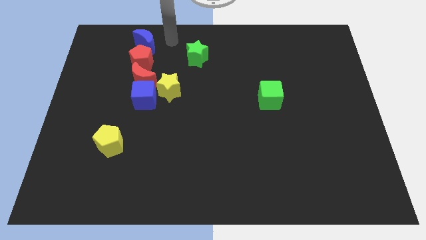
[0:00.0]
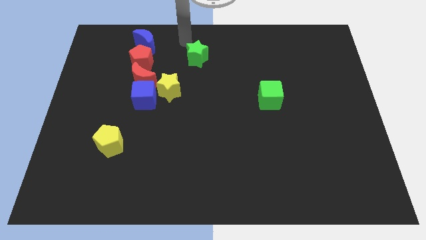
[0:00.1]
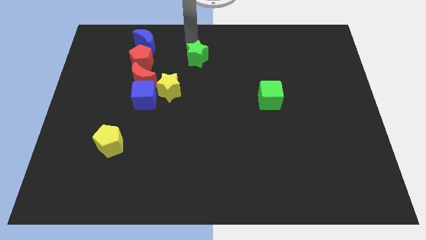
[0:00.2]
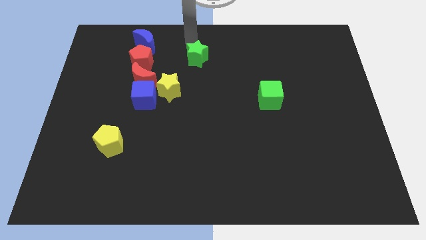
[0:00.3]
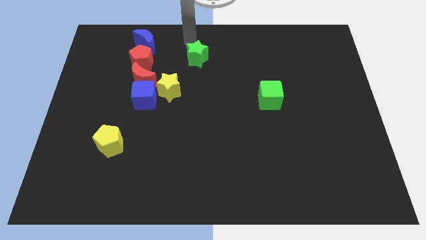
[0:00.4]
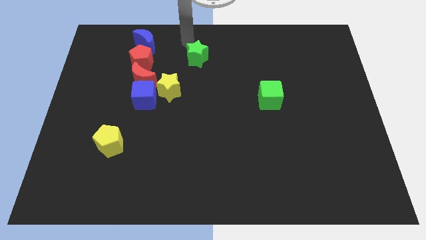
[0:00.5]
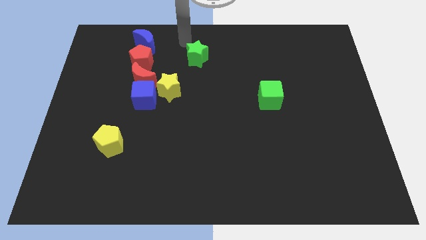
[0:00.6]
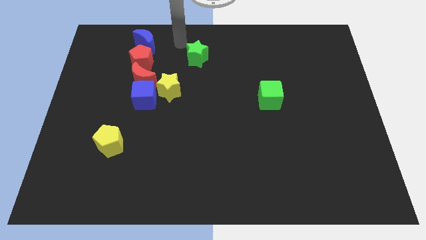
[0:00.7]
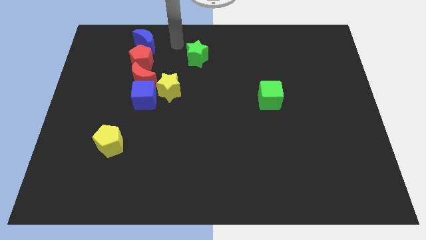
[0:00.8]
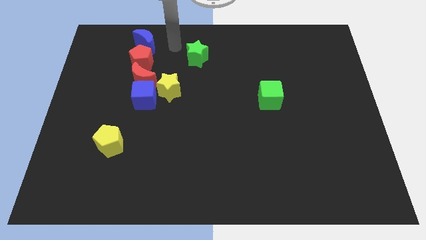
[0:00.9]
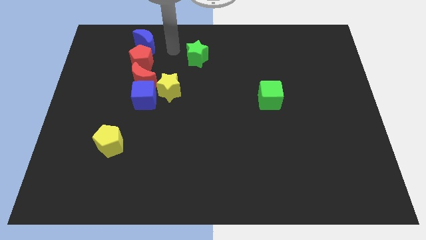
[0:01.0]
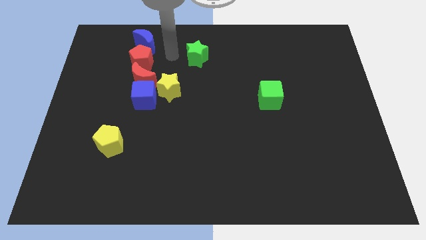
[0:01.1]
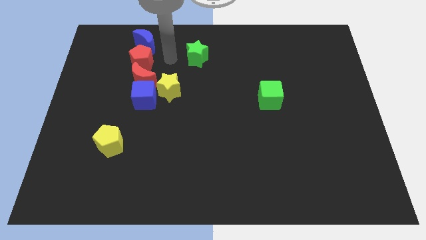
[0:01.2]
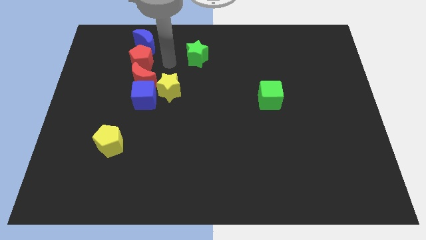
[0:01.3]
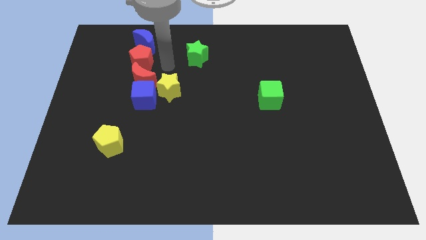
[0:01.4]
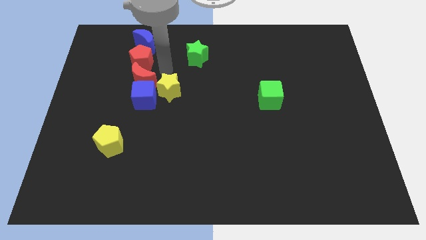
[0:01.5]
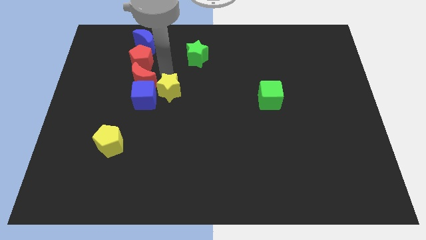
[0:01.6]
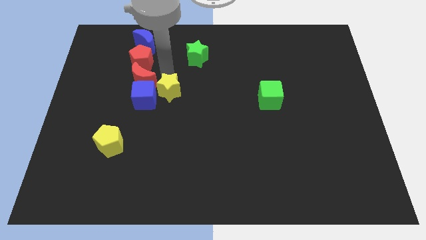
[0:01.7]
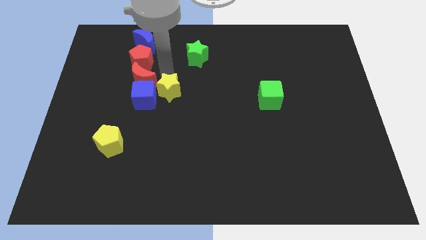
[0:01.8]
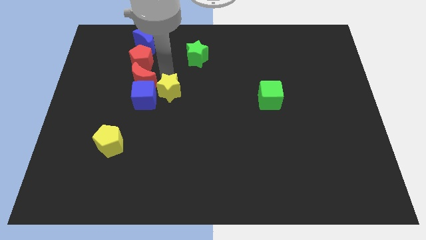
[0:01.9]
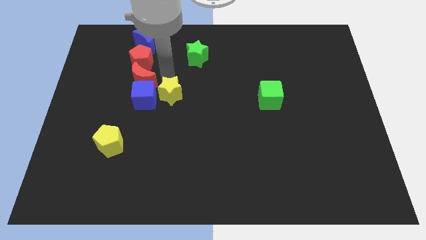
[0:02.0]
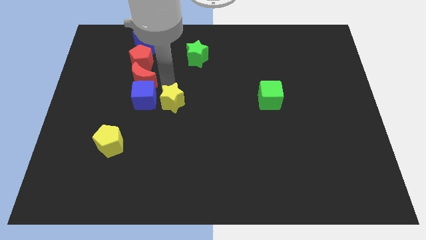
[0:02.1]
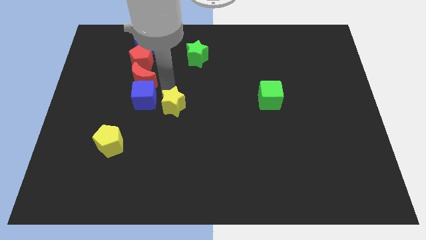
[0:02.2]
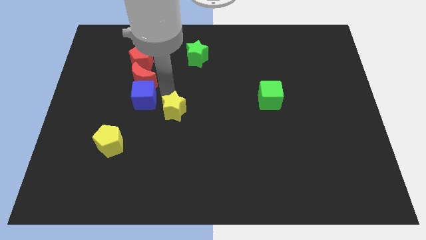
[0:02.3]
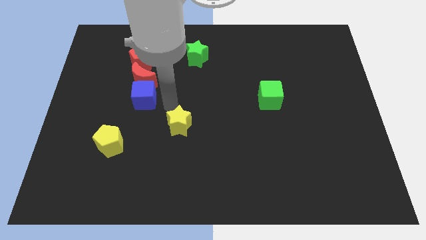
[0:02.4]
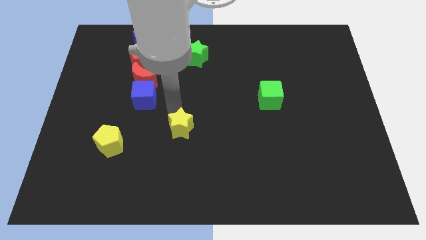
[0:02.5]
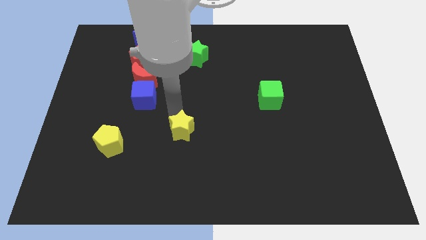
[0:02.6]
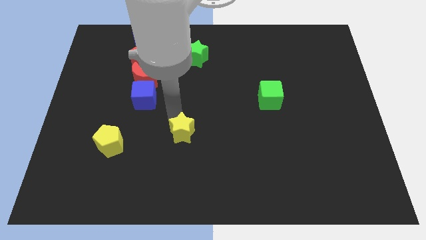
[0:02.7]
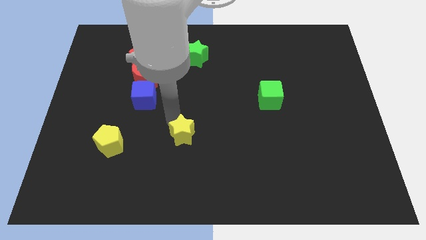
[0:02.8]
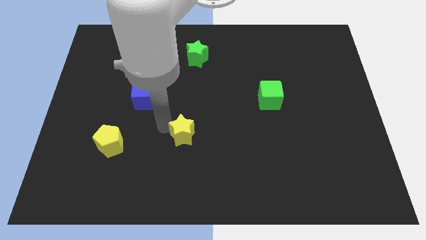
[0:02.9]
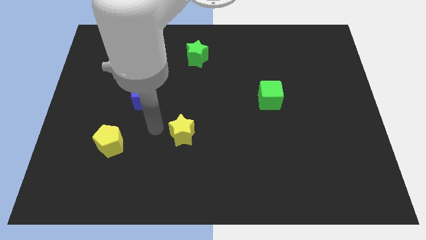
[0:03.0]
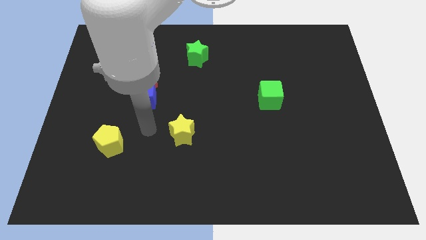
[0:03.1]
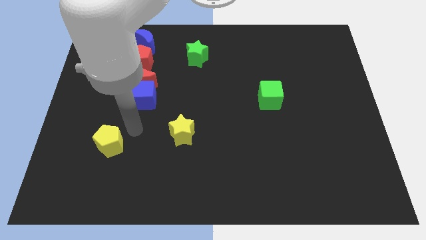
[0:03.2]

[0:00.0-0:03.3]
slightly move down the yellow star

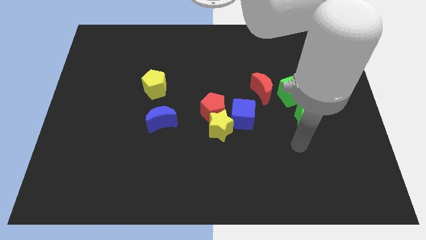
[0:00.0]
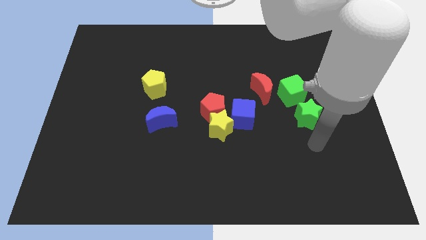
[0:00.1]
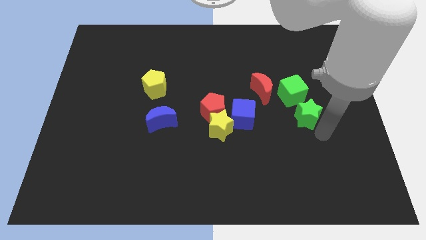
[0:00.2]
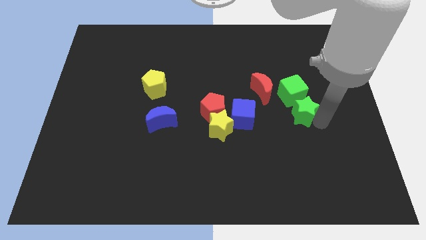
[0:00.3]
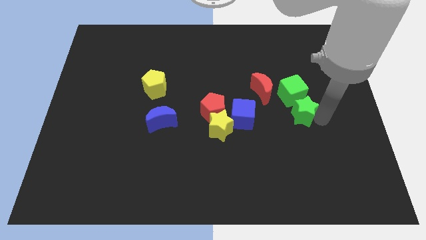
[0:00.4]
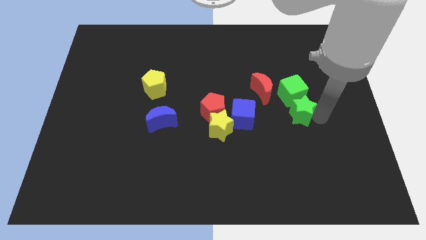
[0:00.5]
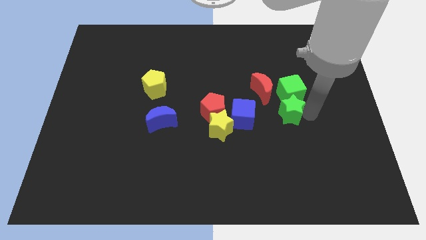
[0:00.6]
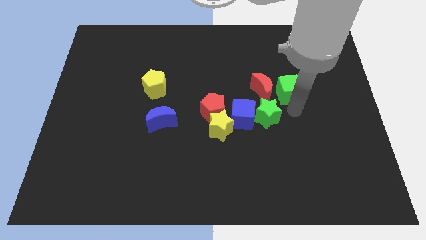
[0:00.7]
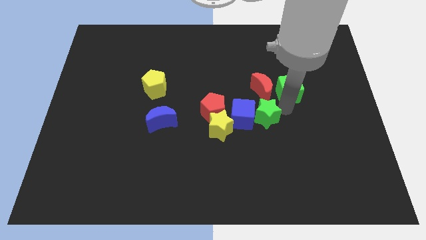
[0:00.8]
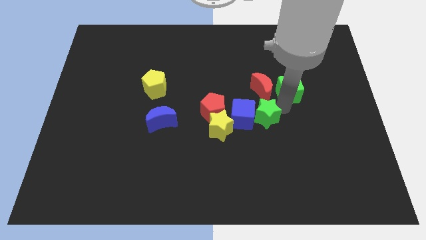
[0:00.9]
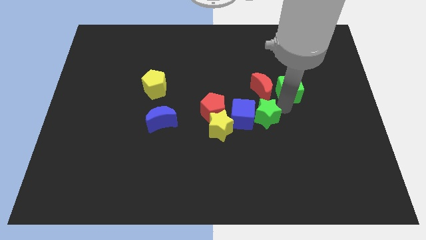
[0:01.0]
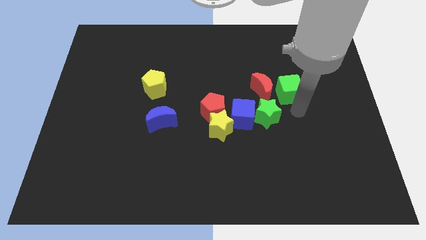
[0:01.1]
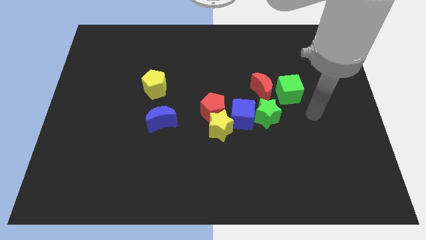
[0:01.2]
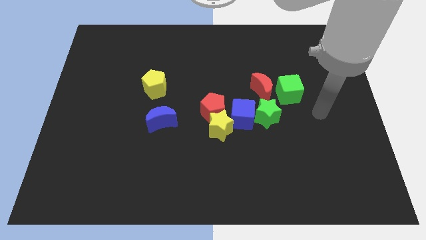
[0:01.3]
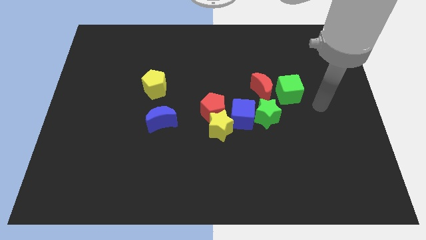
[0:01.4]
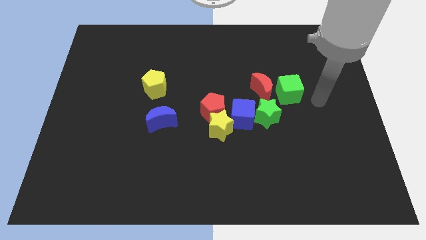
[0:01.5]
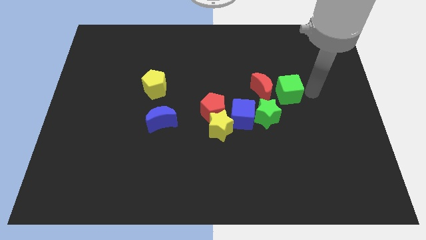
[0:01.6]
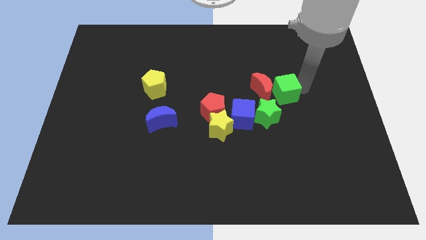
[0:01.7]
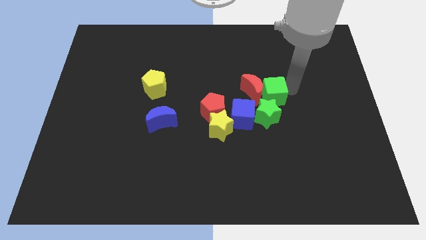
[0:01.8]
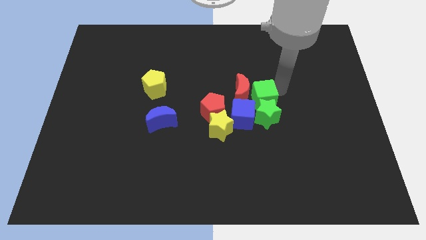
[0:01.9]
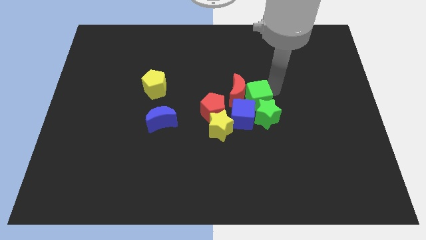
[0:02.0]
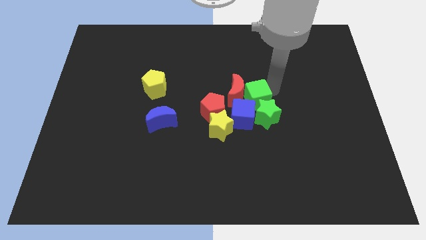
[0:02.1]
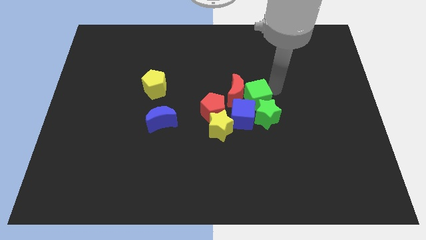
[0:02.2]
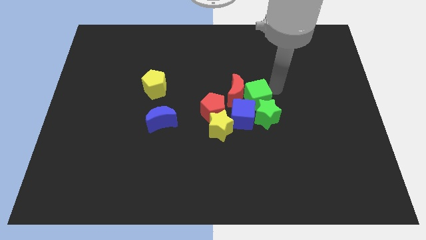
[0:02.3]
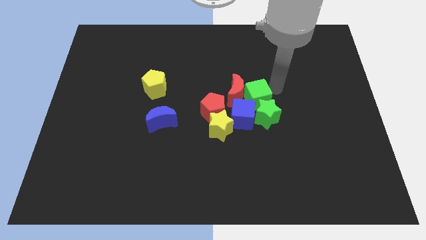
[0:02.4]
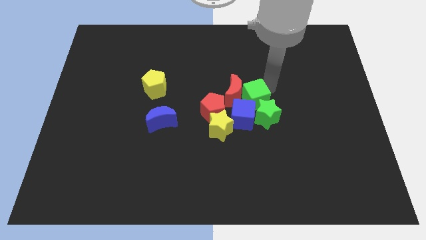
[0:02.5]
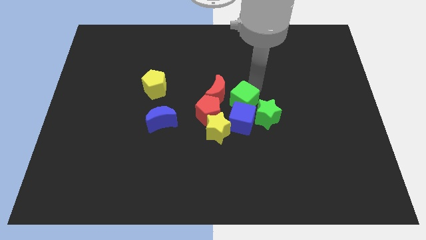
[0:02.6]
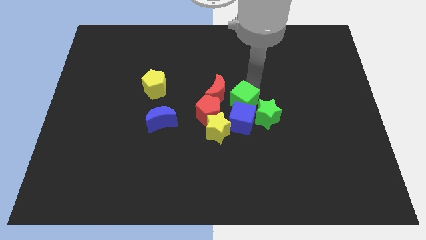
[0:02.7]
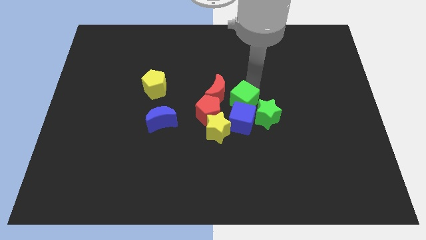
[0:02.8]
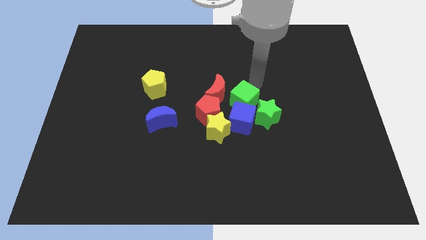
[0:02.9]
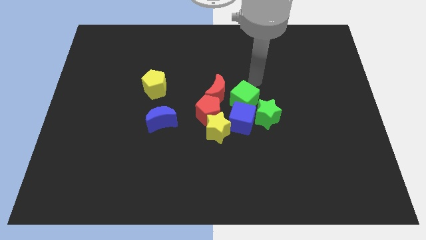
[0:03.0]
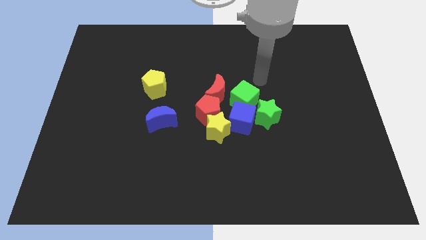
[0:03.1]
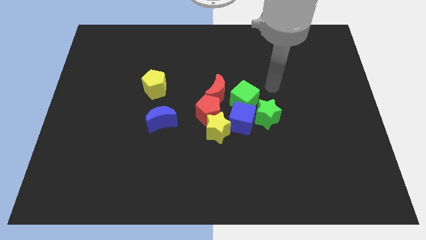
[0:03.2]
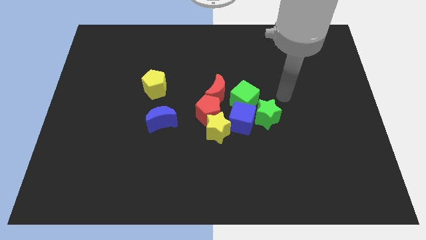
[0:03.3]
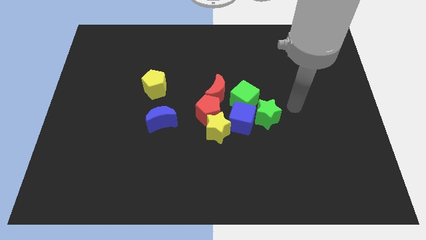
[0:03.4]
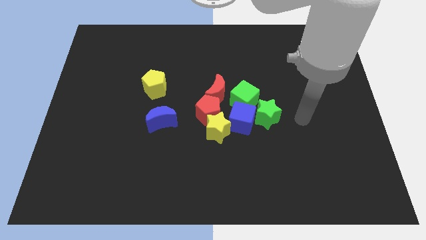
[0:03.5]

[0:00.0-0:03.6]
place the green cube on the top of the blue cube

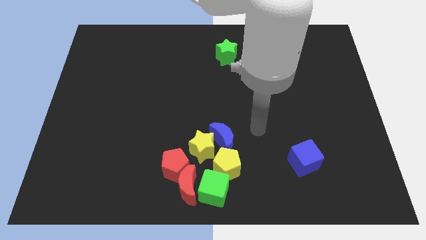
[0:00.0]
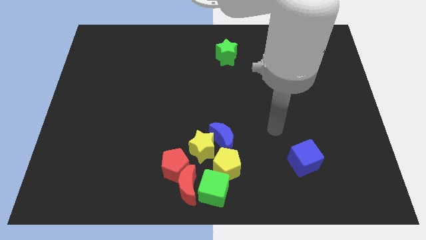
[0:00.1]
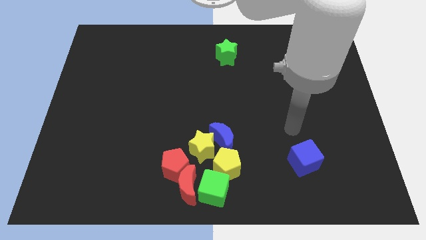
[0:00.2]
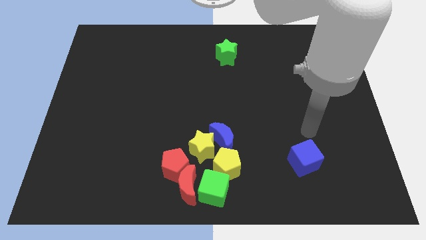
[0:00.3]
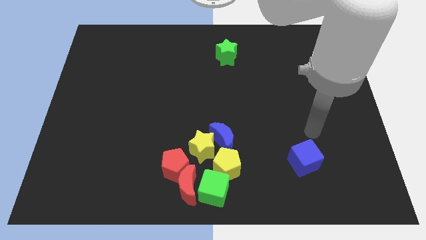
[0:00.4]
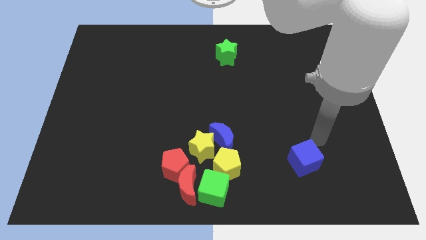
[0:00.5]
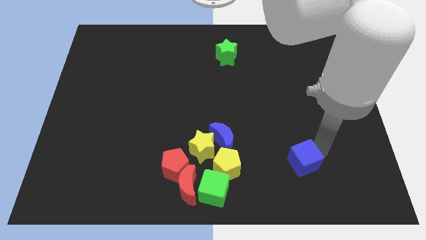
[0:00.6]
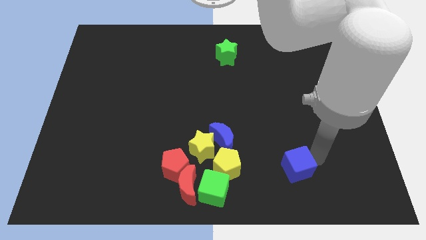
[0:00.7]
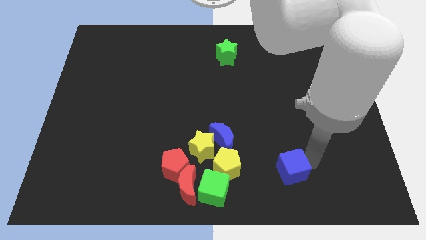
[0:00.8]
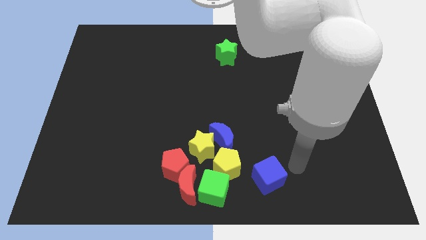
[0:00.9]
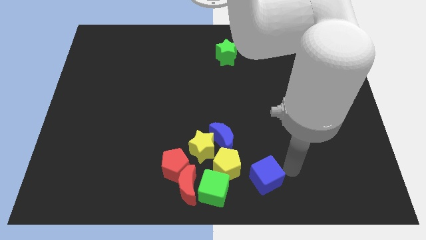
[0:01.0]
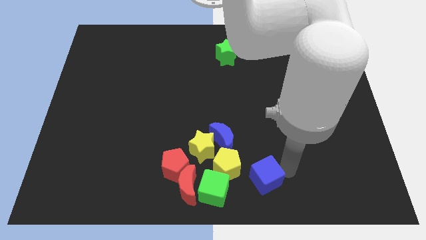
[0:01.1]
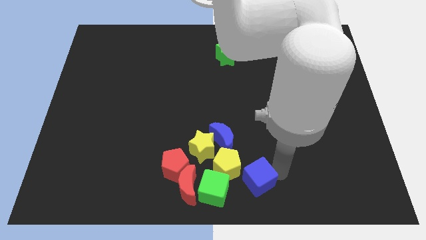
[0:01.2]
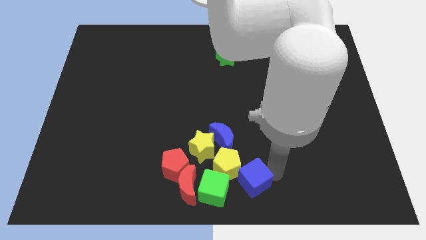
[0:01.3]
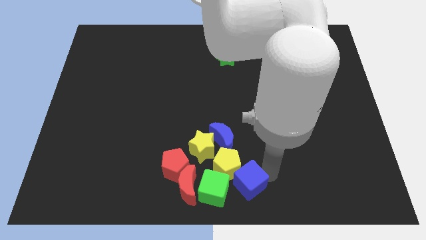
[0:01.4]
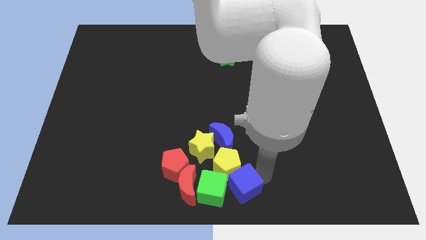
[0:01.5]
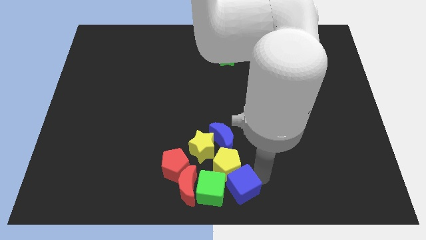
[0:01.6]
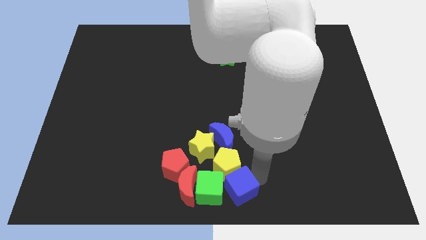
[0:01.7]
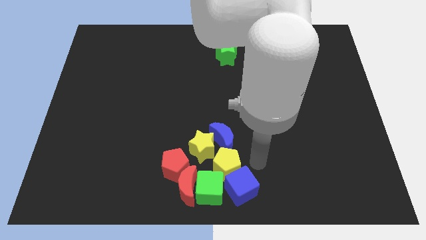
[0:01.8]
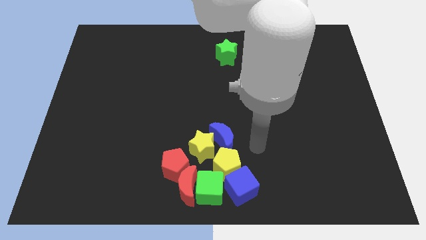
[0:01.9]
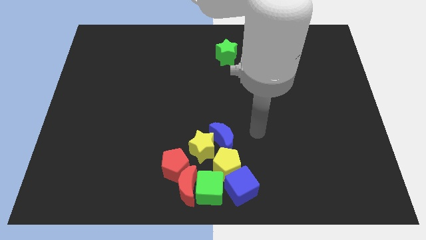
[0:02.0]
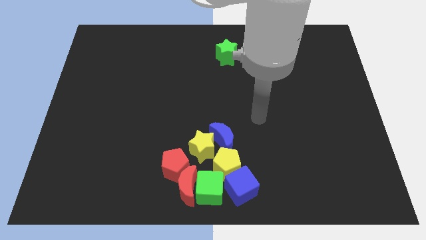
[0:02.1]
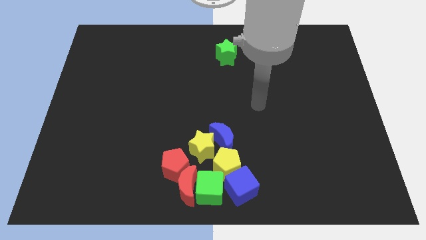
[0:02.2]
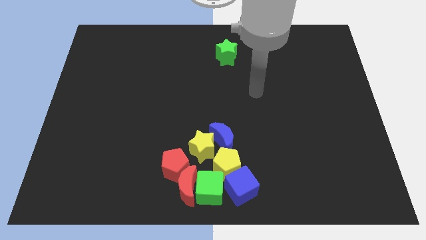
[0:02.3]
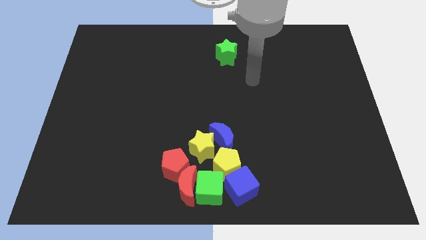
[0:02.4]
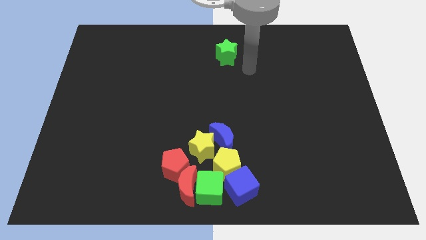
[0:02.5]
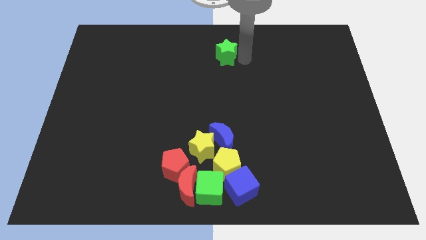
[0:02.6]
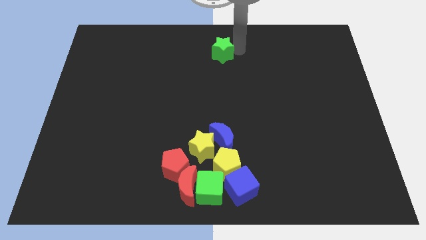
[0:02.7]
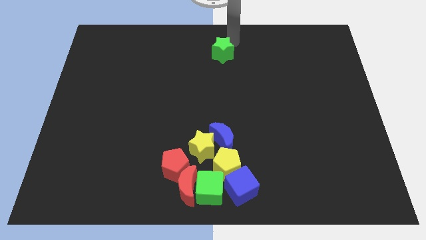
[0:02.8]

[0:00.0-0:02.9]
move blue cube to the right of green cube
